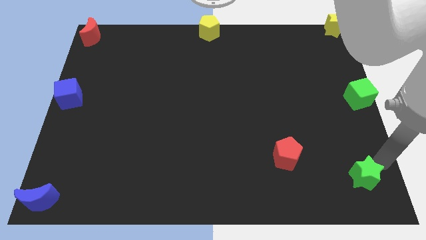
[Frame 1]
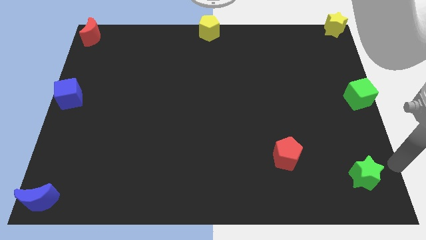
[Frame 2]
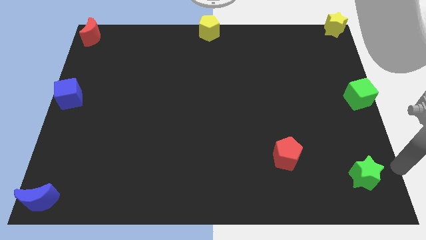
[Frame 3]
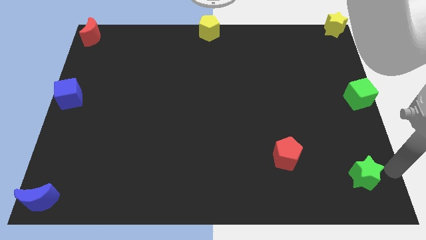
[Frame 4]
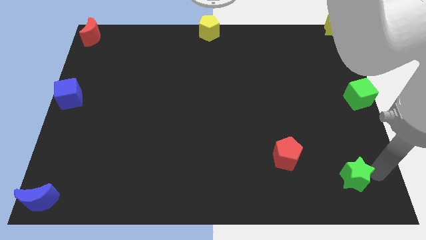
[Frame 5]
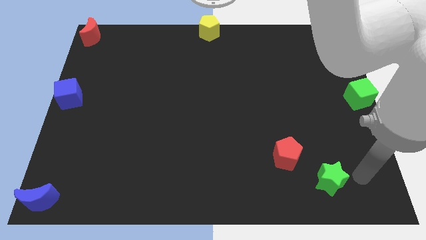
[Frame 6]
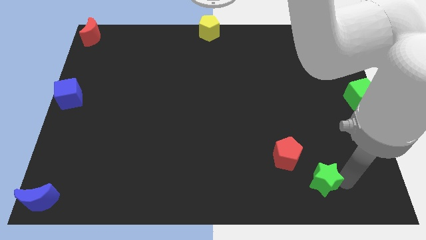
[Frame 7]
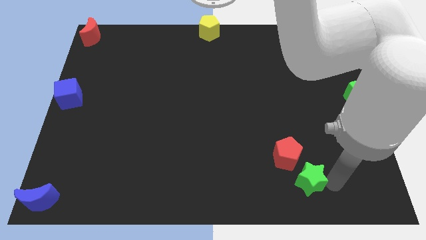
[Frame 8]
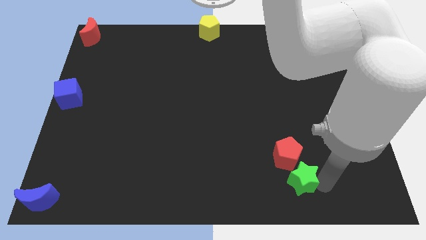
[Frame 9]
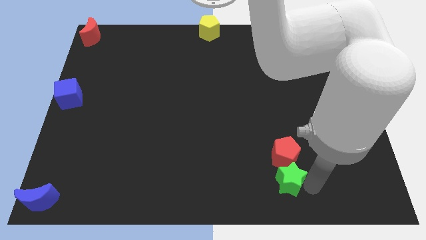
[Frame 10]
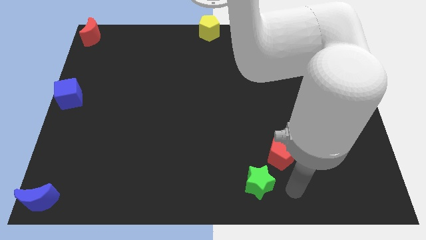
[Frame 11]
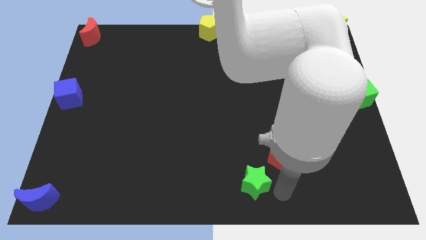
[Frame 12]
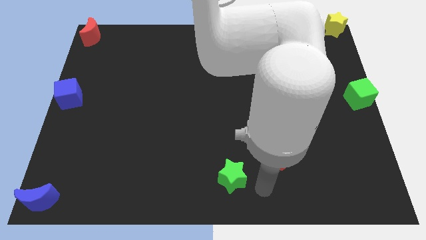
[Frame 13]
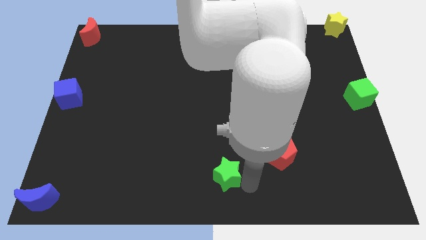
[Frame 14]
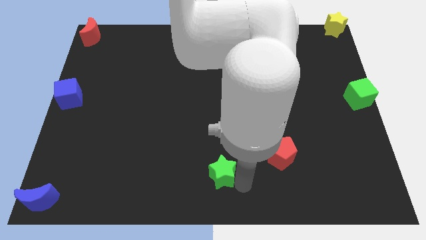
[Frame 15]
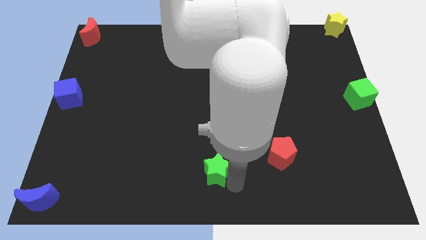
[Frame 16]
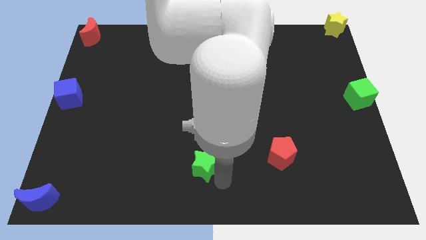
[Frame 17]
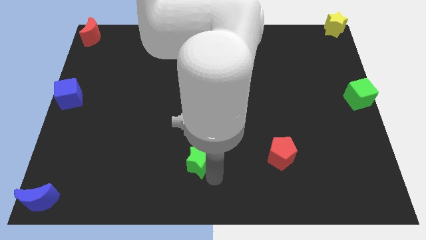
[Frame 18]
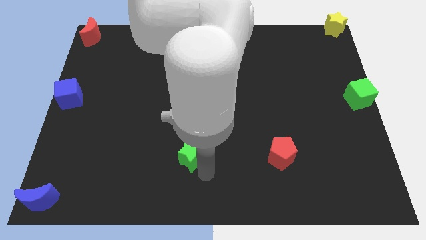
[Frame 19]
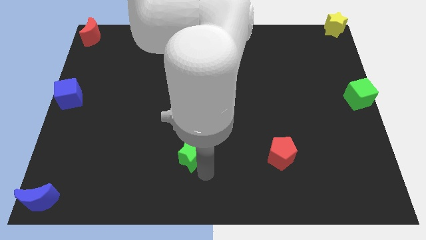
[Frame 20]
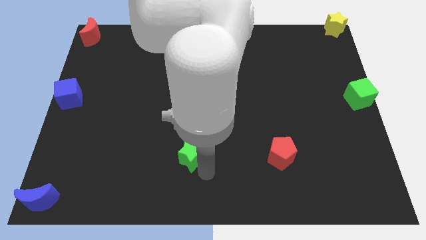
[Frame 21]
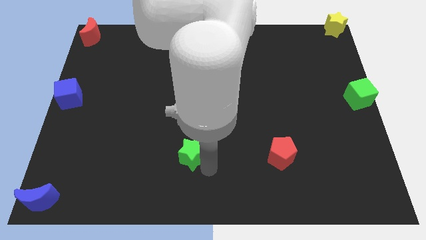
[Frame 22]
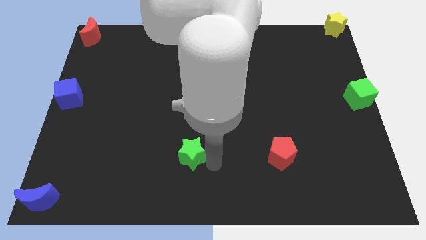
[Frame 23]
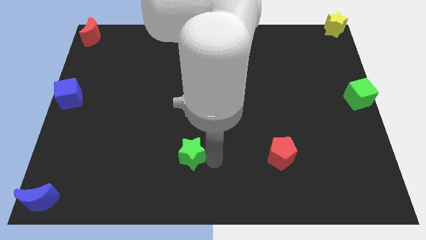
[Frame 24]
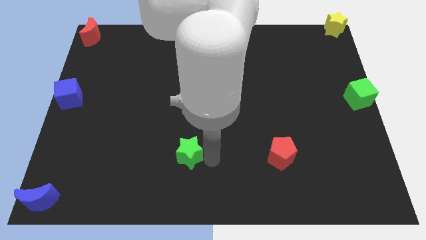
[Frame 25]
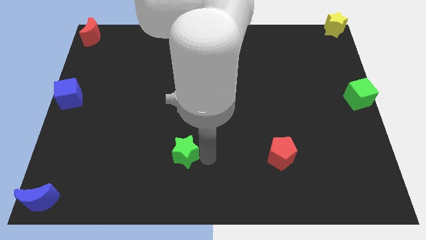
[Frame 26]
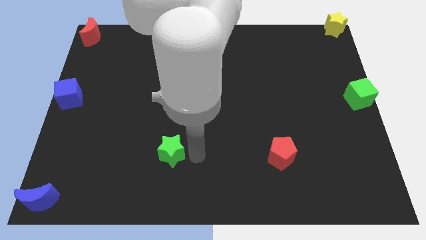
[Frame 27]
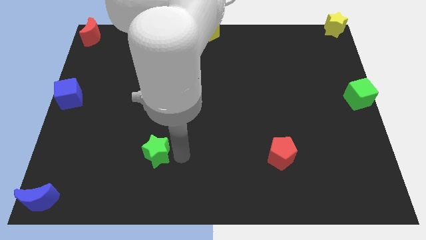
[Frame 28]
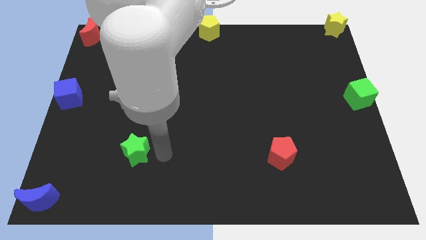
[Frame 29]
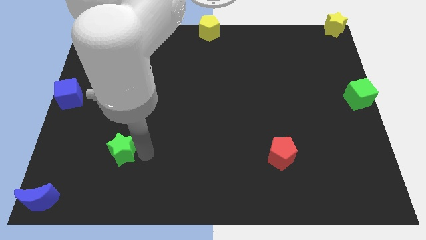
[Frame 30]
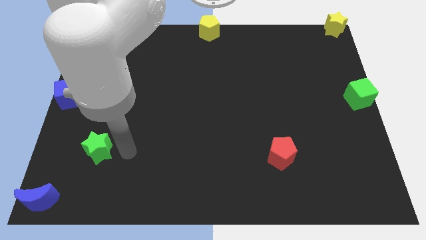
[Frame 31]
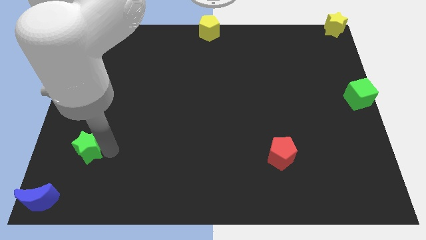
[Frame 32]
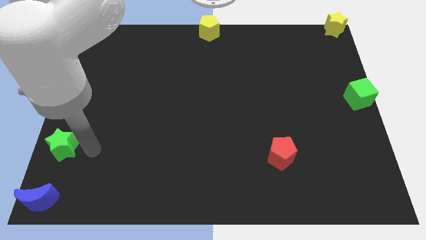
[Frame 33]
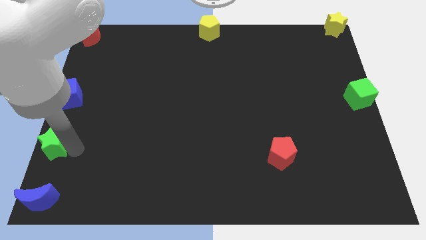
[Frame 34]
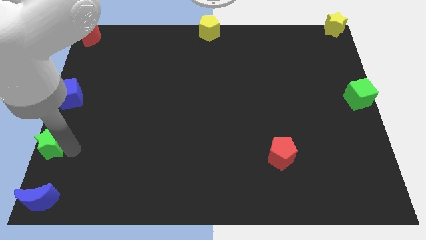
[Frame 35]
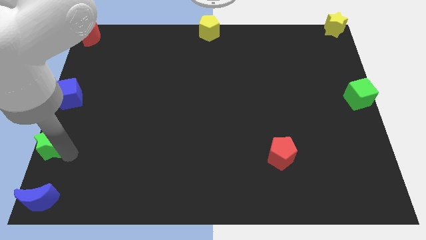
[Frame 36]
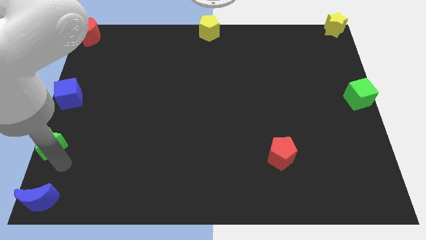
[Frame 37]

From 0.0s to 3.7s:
place green star vertically below the blue cube

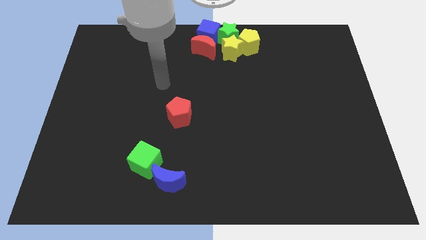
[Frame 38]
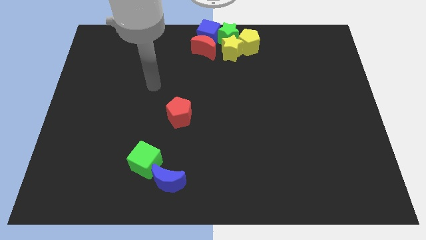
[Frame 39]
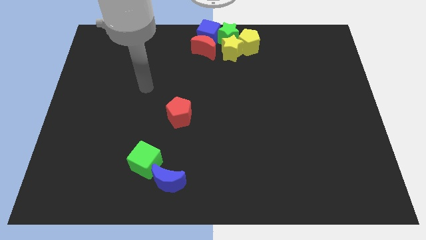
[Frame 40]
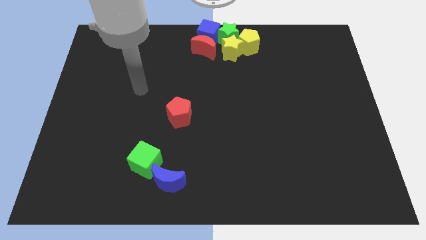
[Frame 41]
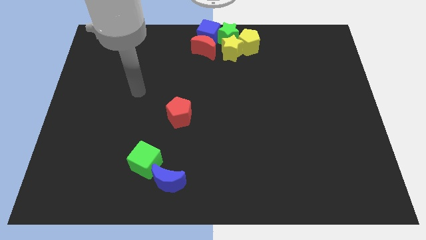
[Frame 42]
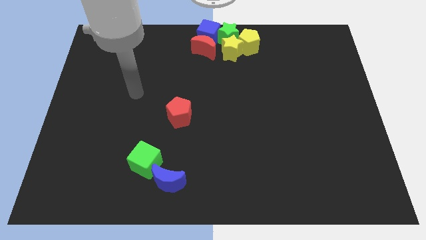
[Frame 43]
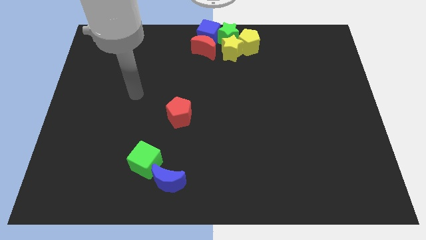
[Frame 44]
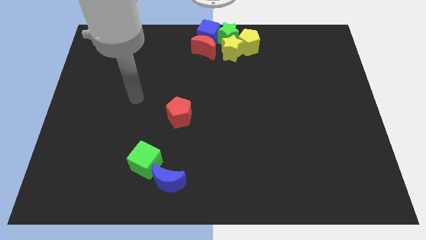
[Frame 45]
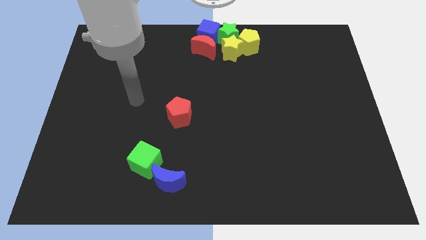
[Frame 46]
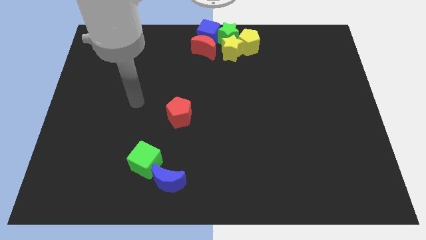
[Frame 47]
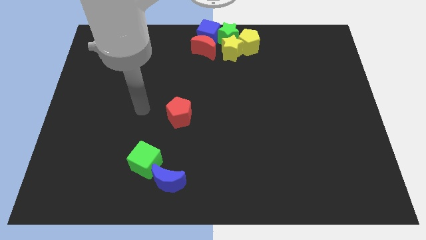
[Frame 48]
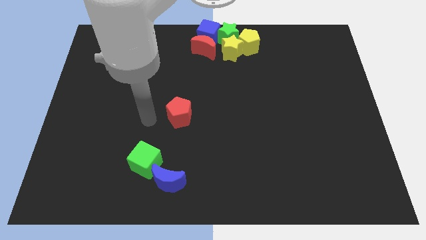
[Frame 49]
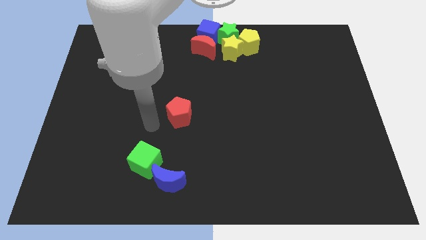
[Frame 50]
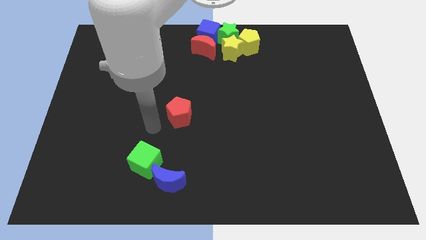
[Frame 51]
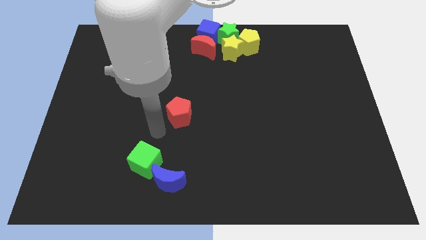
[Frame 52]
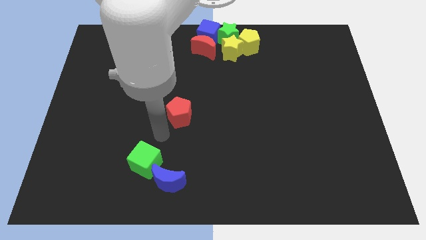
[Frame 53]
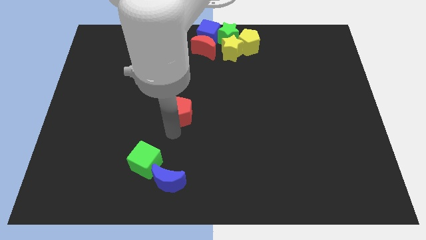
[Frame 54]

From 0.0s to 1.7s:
place your hand at the bottom of the red pentagon

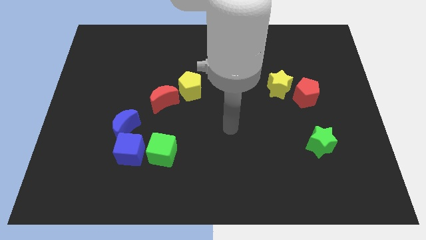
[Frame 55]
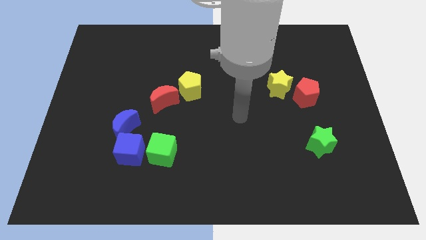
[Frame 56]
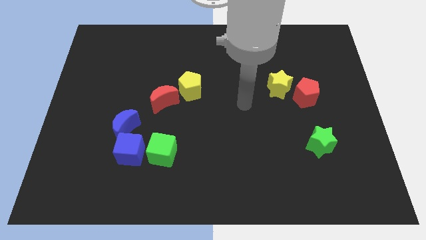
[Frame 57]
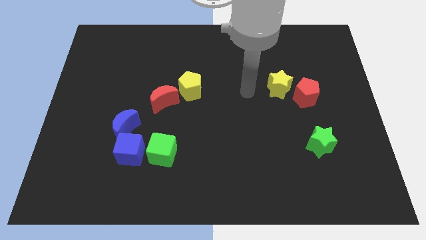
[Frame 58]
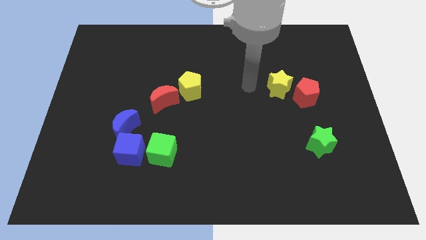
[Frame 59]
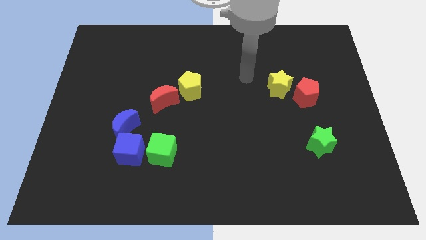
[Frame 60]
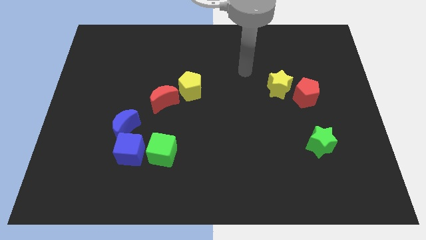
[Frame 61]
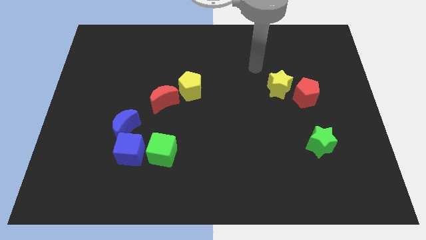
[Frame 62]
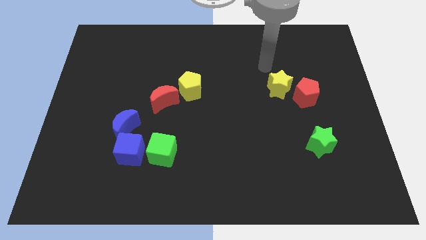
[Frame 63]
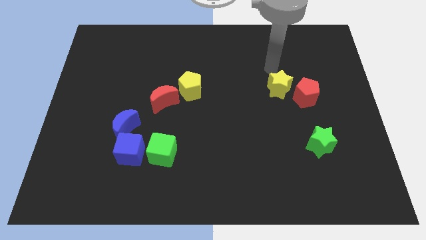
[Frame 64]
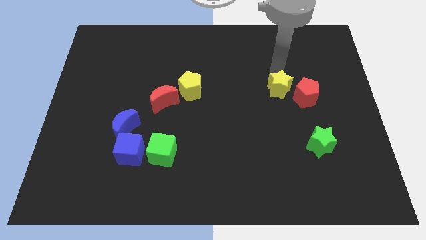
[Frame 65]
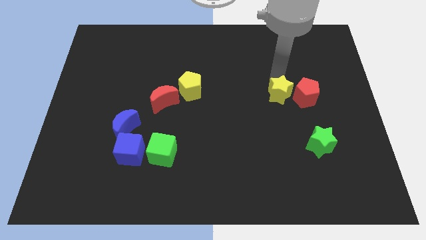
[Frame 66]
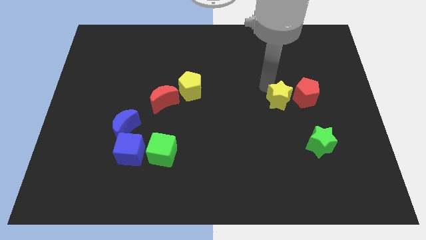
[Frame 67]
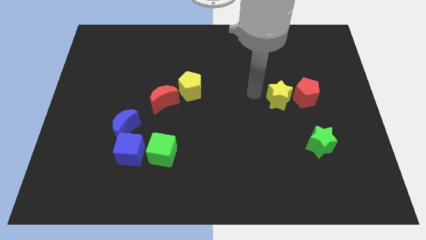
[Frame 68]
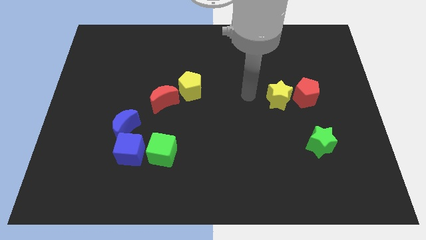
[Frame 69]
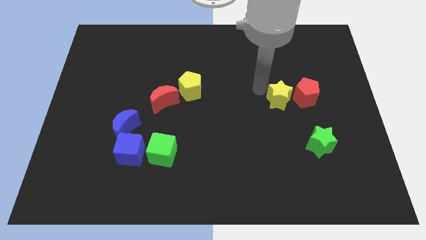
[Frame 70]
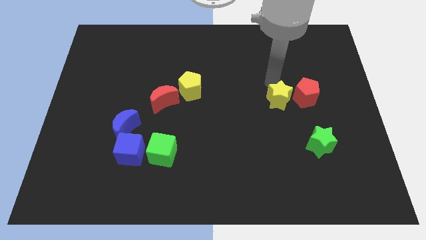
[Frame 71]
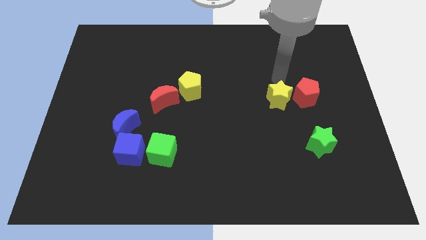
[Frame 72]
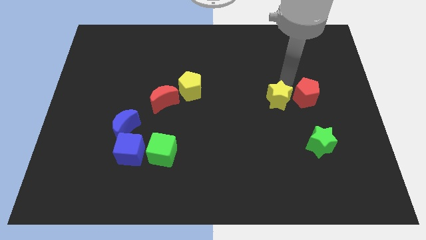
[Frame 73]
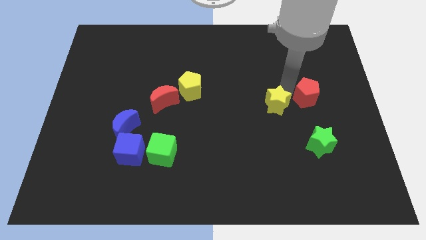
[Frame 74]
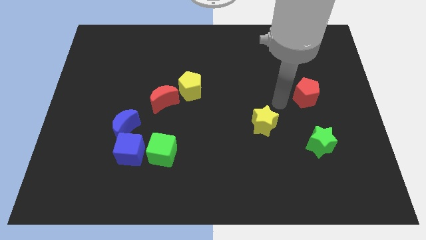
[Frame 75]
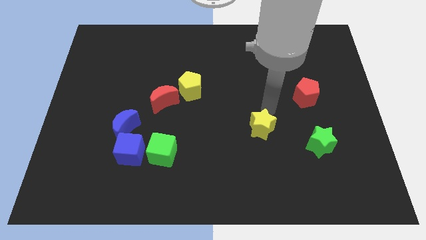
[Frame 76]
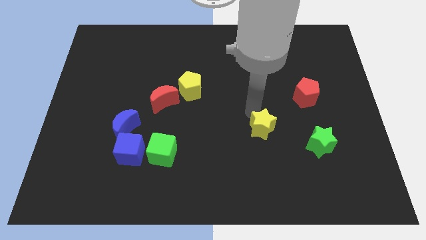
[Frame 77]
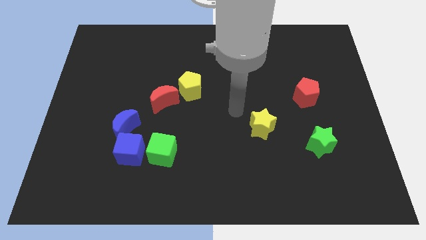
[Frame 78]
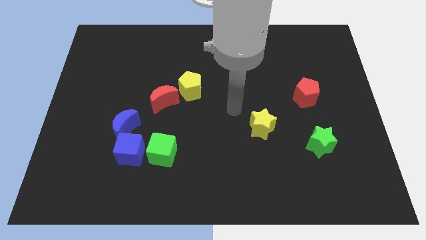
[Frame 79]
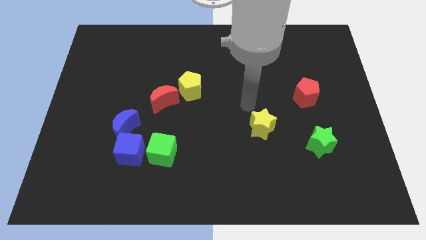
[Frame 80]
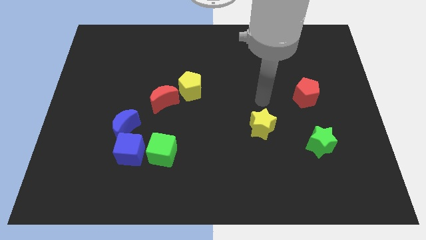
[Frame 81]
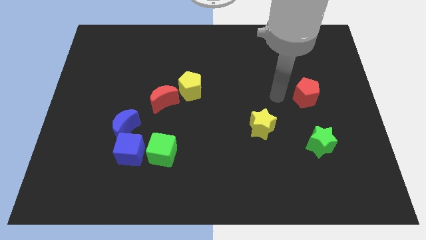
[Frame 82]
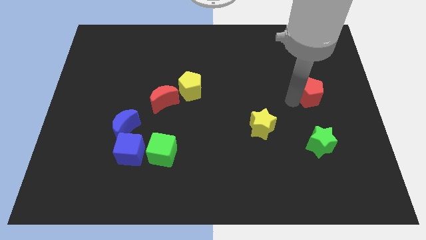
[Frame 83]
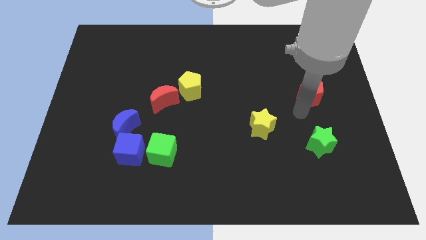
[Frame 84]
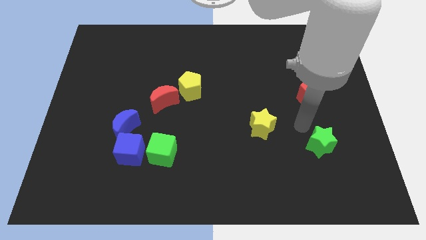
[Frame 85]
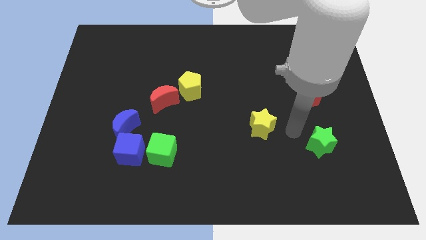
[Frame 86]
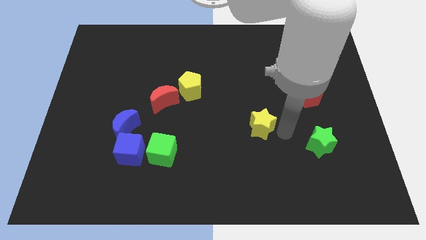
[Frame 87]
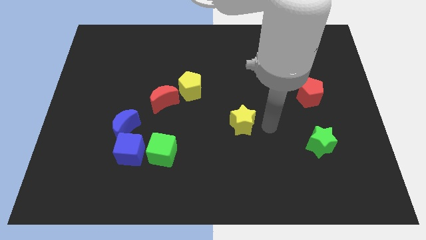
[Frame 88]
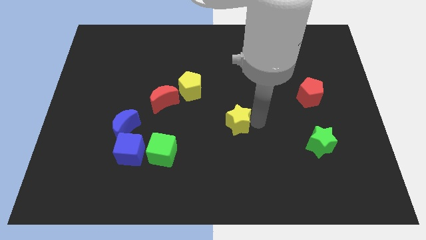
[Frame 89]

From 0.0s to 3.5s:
slide the red pentagon and yellow star diagonal to each other

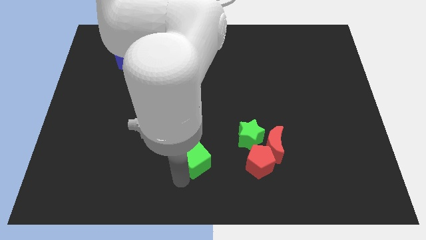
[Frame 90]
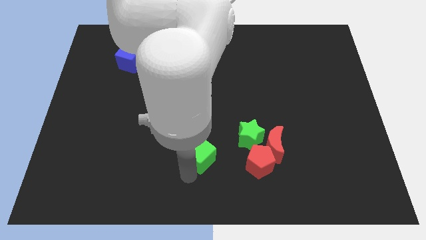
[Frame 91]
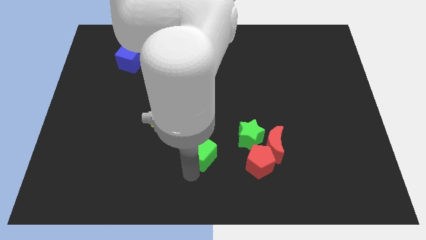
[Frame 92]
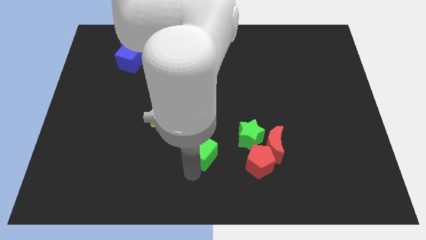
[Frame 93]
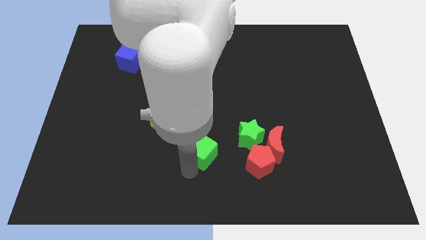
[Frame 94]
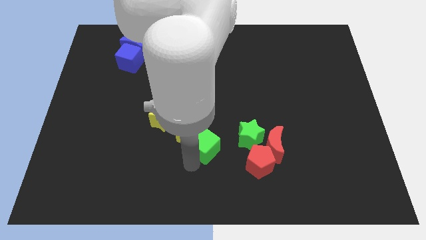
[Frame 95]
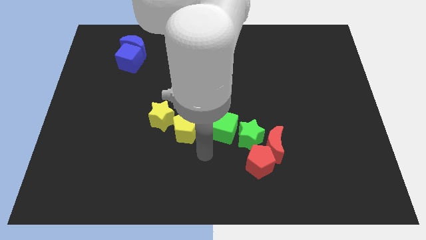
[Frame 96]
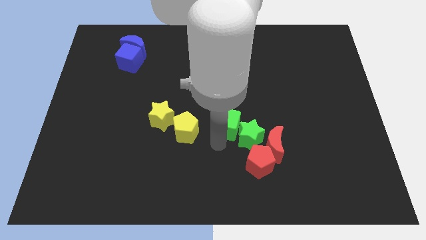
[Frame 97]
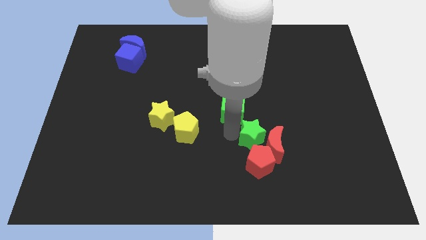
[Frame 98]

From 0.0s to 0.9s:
place the green cube above the green star
